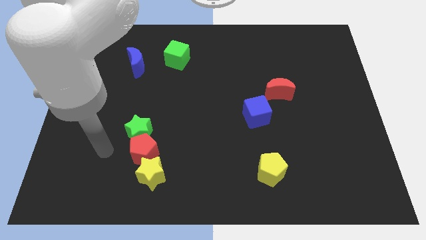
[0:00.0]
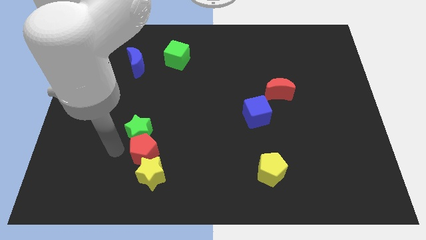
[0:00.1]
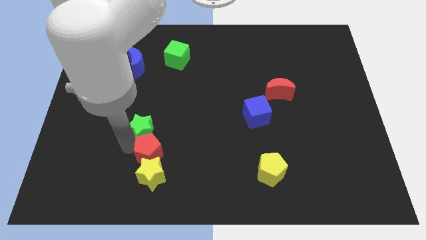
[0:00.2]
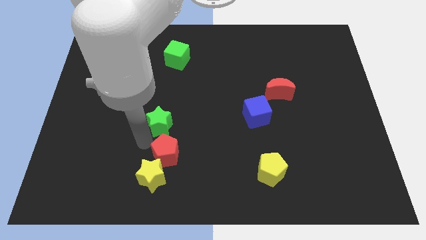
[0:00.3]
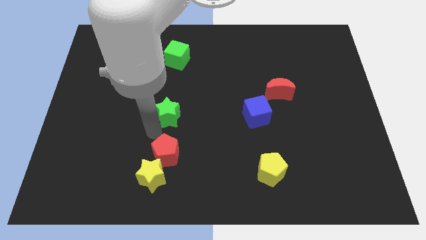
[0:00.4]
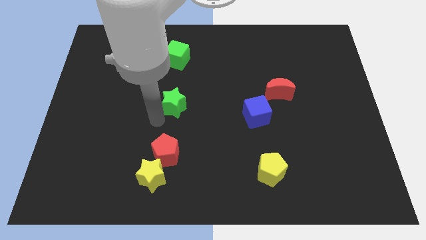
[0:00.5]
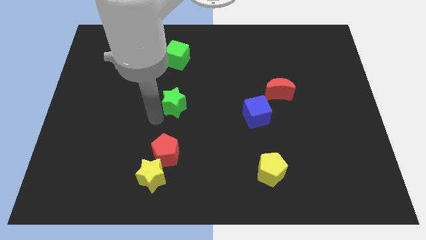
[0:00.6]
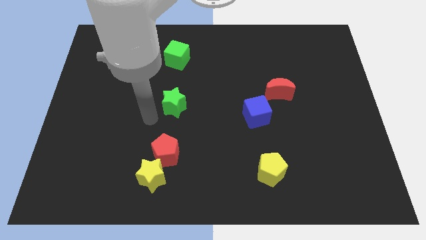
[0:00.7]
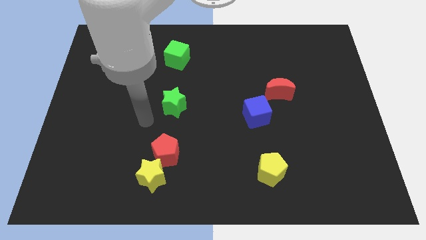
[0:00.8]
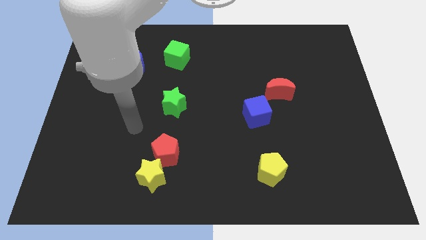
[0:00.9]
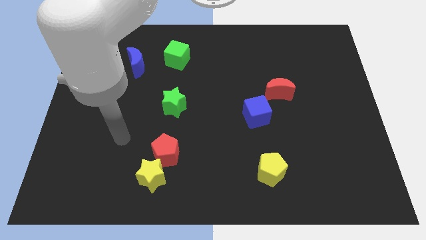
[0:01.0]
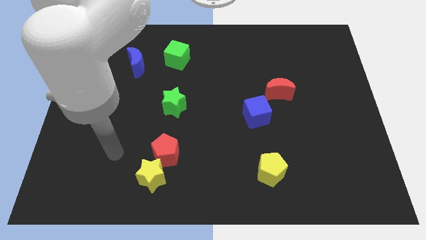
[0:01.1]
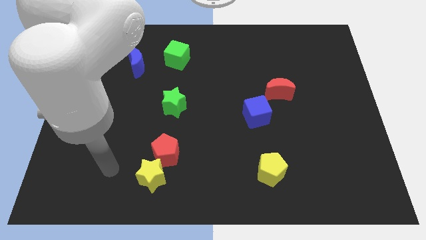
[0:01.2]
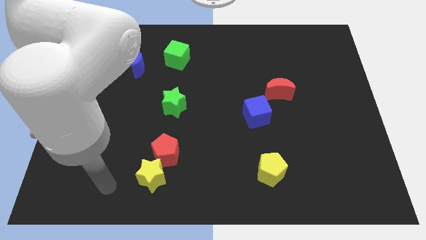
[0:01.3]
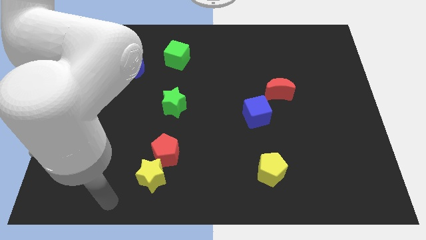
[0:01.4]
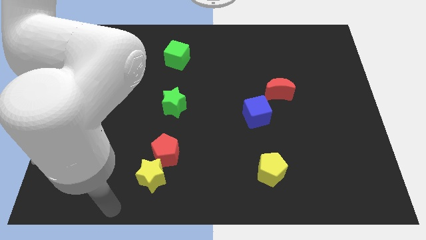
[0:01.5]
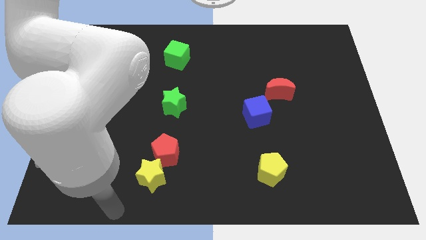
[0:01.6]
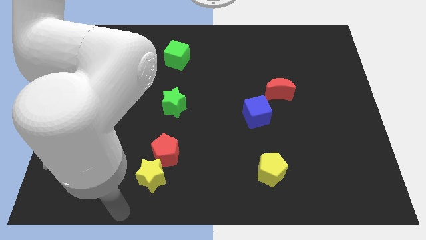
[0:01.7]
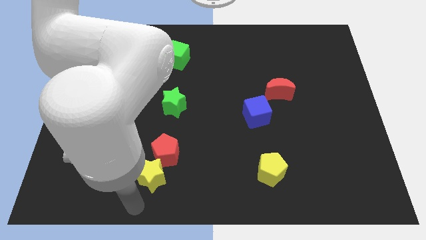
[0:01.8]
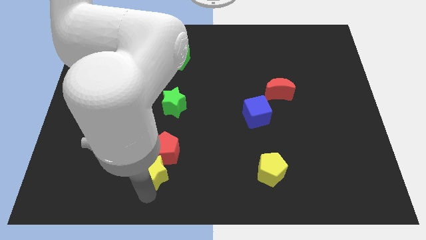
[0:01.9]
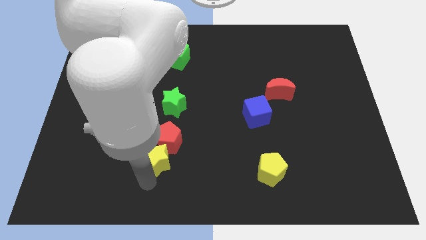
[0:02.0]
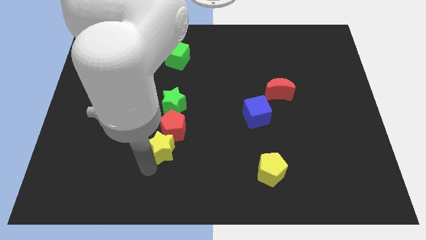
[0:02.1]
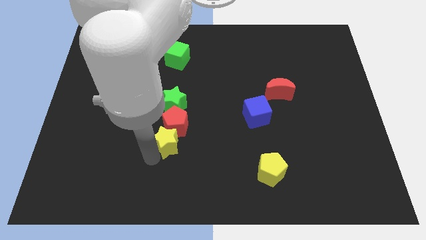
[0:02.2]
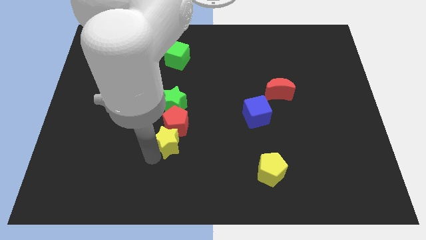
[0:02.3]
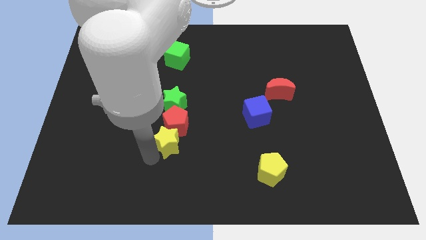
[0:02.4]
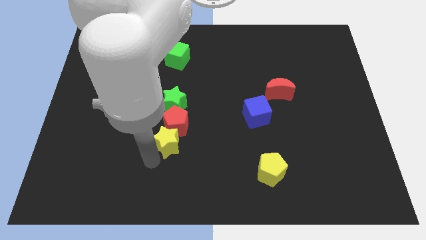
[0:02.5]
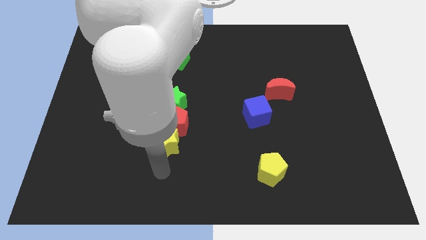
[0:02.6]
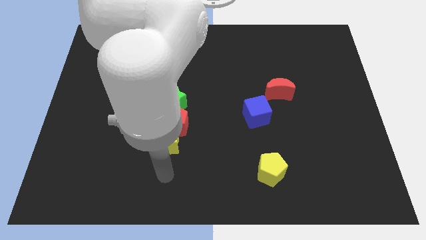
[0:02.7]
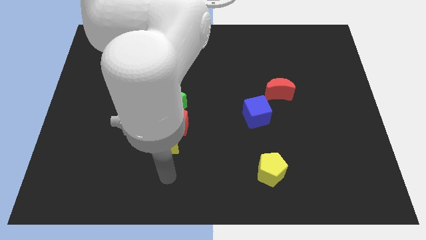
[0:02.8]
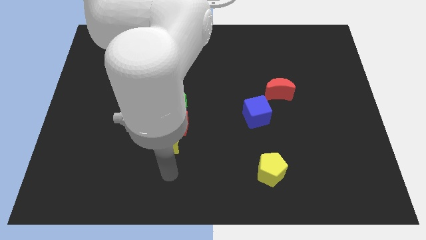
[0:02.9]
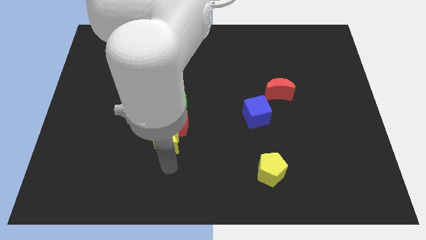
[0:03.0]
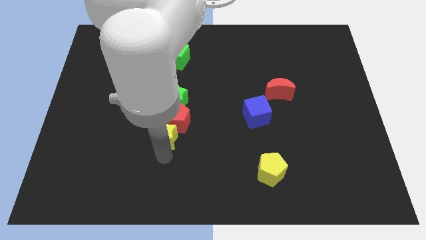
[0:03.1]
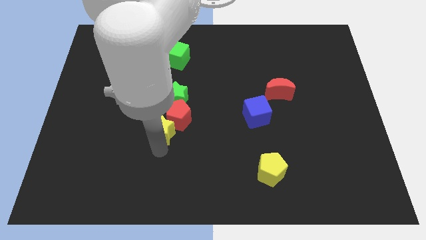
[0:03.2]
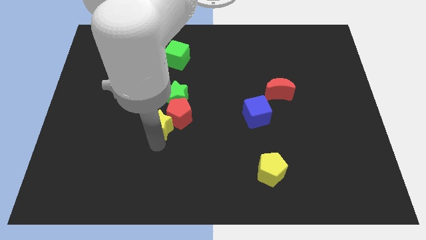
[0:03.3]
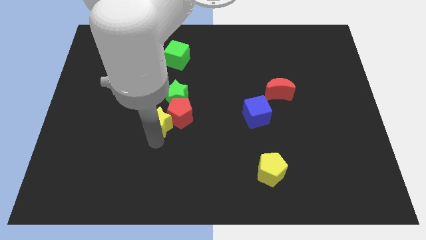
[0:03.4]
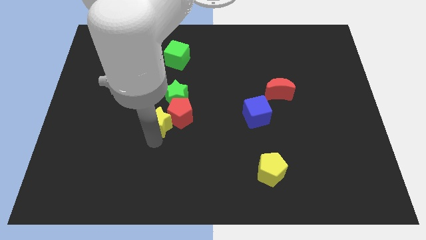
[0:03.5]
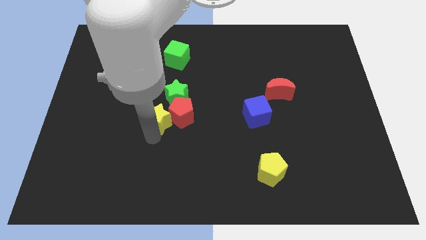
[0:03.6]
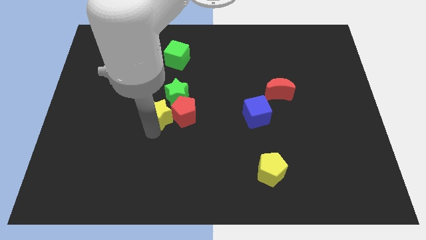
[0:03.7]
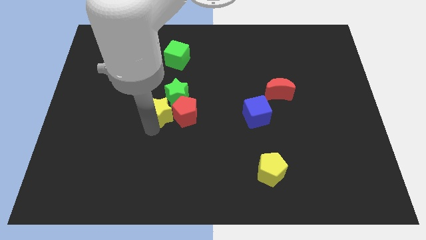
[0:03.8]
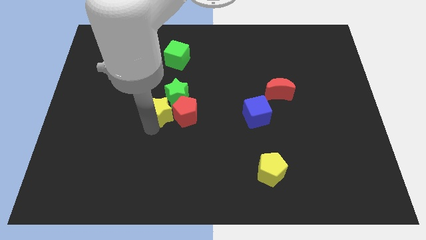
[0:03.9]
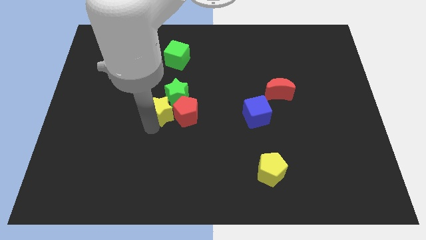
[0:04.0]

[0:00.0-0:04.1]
push the group of blocks below the green cube

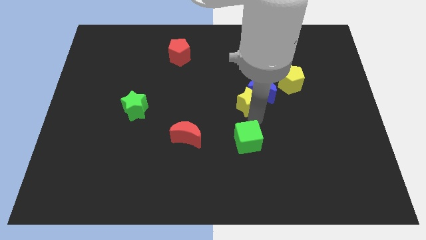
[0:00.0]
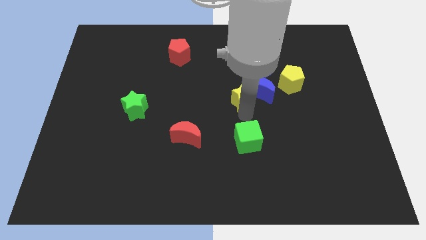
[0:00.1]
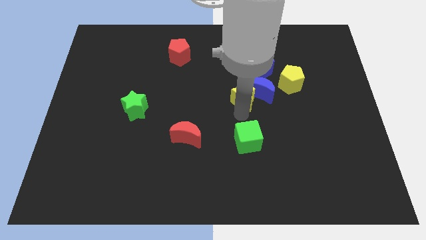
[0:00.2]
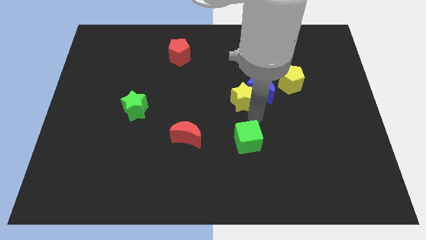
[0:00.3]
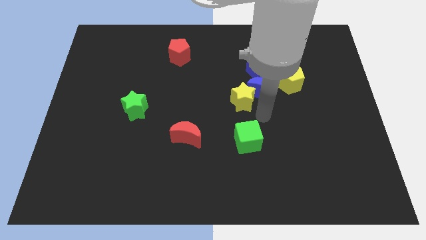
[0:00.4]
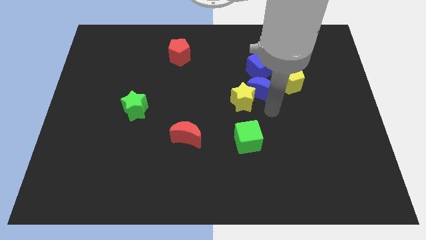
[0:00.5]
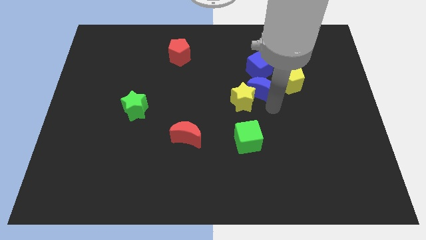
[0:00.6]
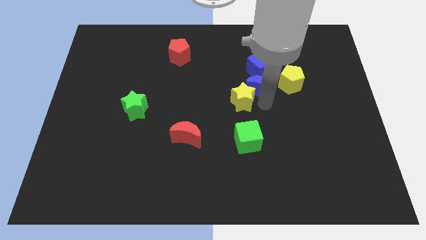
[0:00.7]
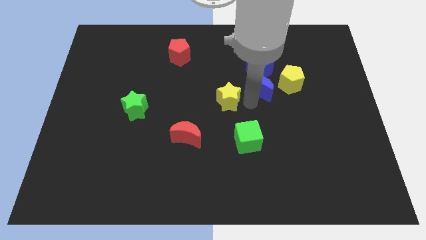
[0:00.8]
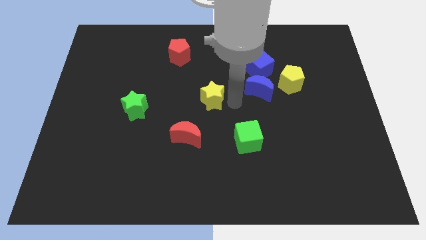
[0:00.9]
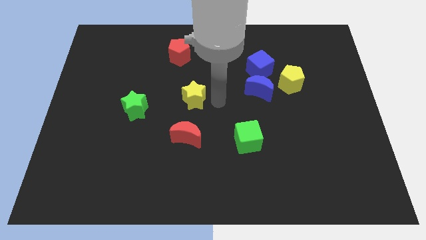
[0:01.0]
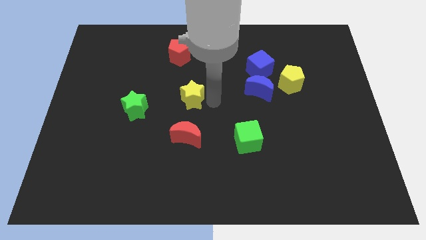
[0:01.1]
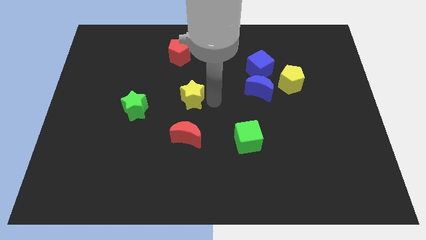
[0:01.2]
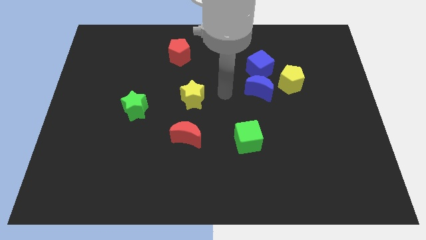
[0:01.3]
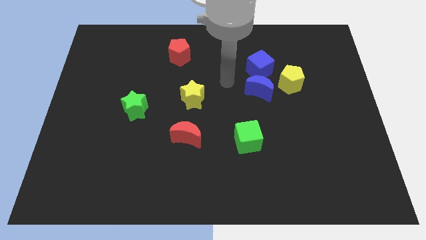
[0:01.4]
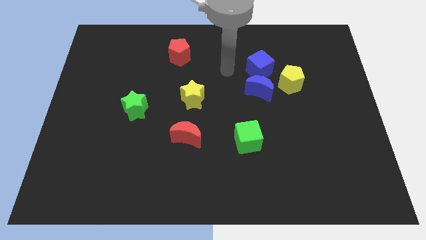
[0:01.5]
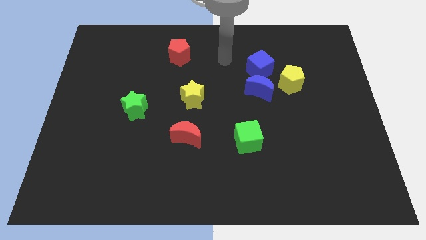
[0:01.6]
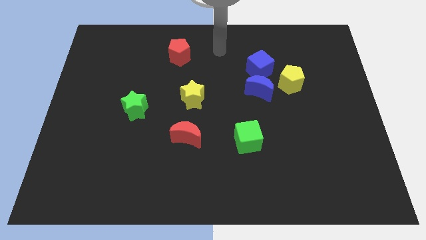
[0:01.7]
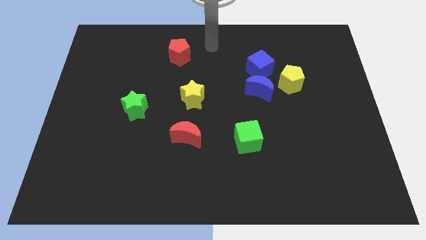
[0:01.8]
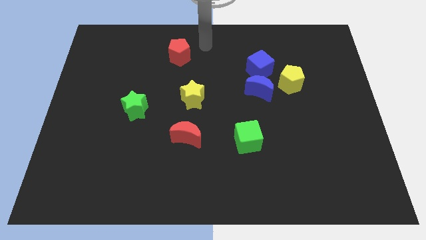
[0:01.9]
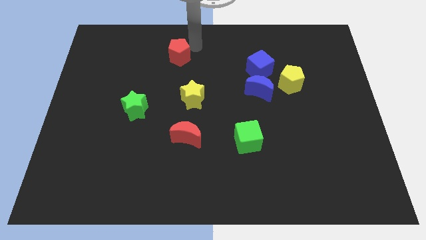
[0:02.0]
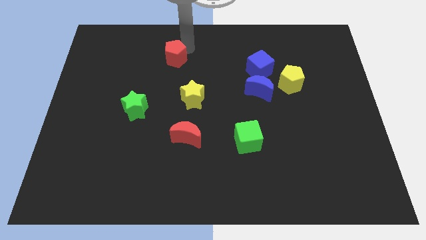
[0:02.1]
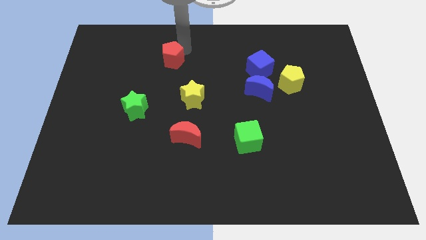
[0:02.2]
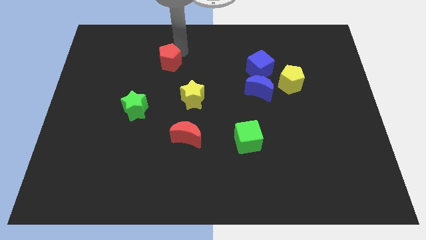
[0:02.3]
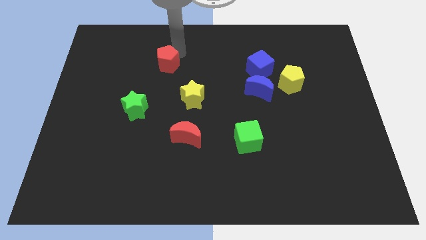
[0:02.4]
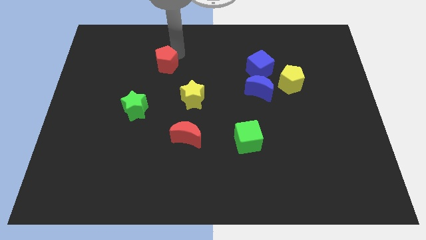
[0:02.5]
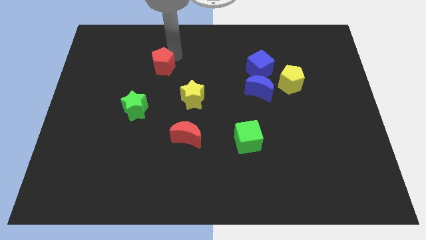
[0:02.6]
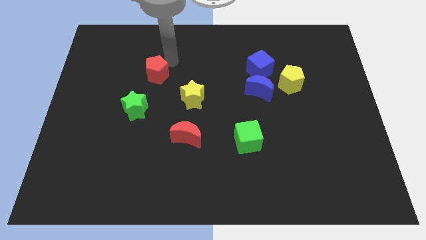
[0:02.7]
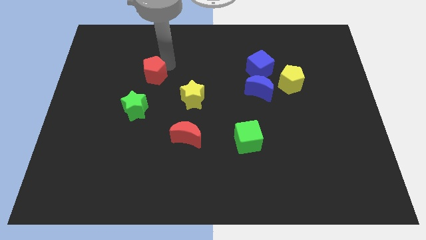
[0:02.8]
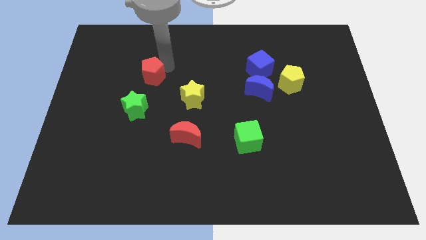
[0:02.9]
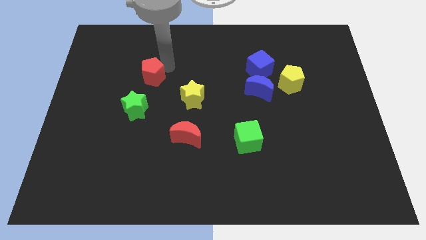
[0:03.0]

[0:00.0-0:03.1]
push red pentagon towards green star

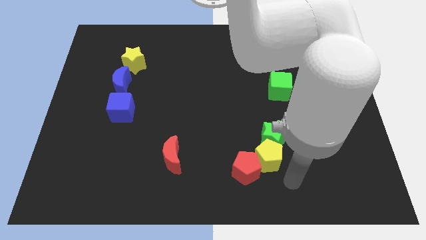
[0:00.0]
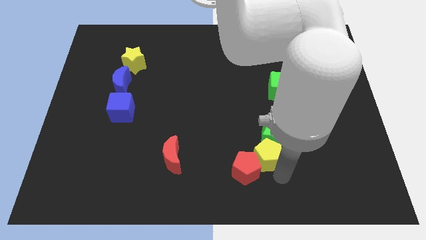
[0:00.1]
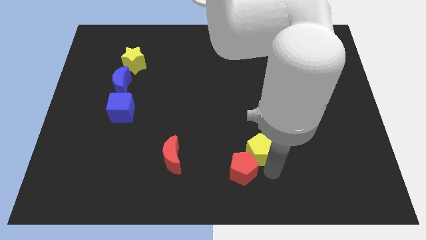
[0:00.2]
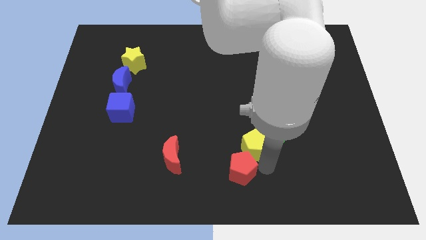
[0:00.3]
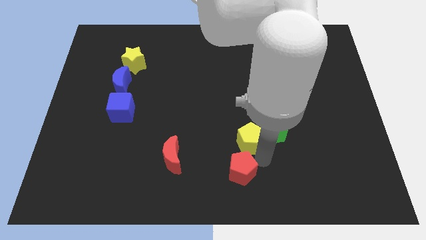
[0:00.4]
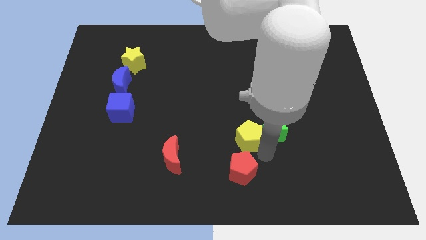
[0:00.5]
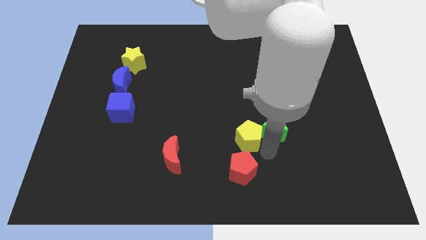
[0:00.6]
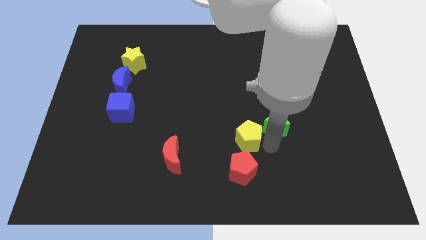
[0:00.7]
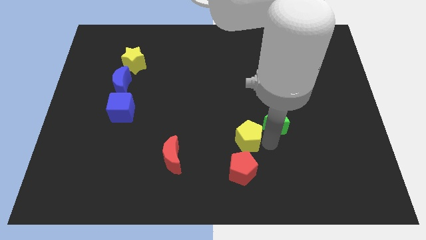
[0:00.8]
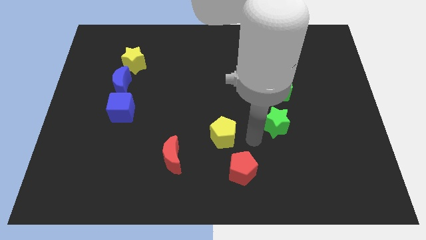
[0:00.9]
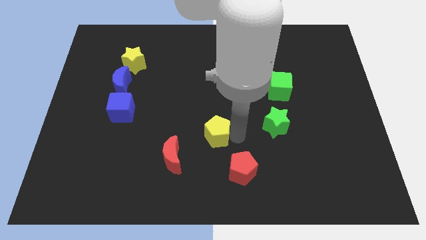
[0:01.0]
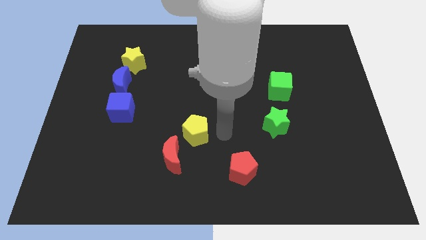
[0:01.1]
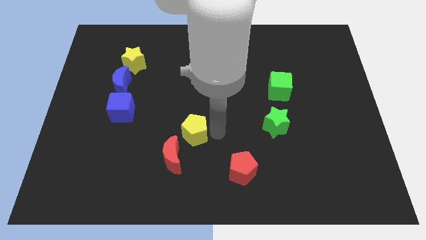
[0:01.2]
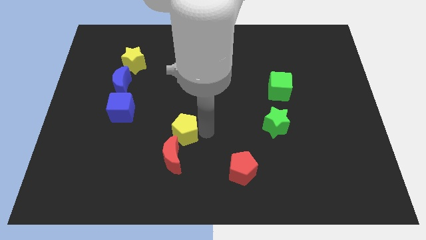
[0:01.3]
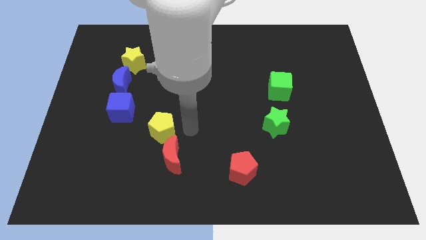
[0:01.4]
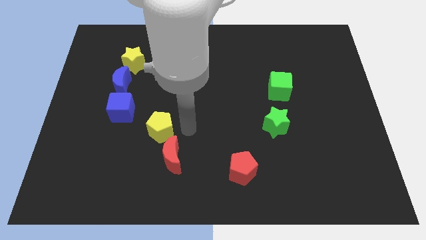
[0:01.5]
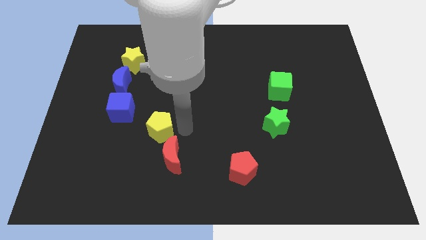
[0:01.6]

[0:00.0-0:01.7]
place the yellow pentagon above the red crescent

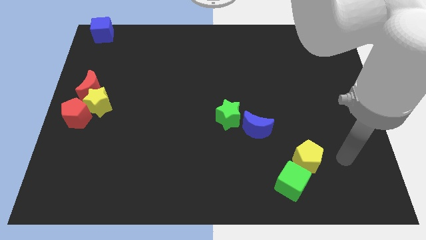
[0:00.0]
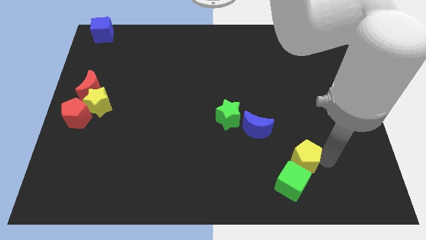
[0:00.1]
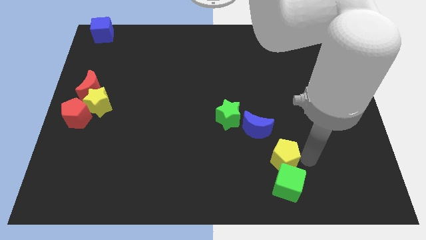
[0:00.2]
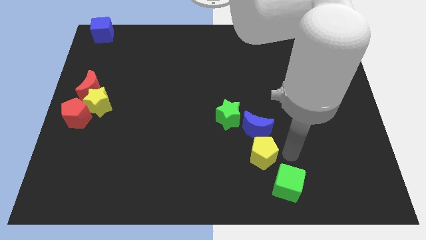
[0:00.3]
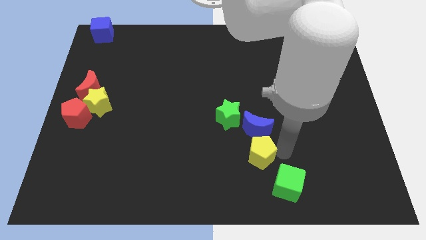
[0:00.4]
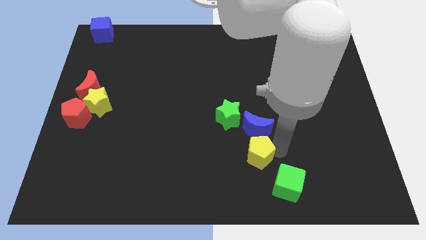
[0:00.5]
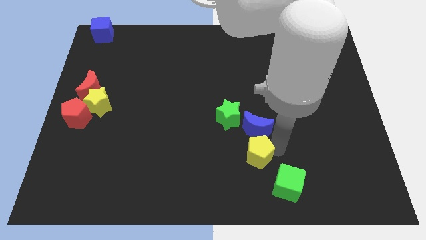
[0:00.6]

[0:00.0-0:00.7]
place the yellow pentagon below the blue crescent
